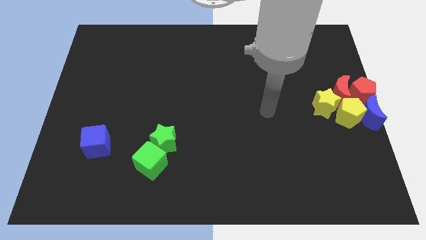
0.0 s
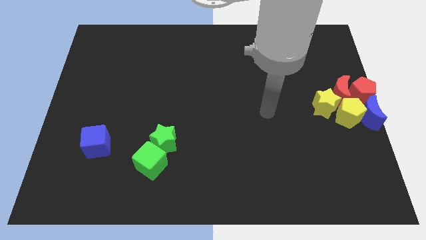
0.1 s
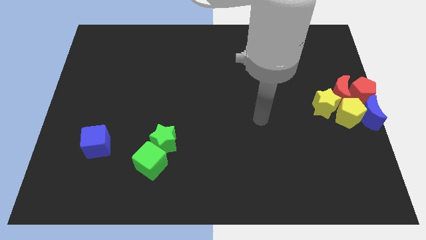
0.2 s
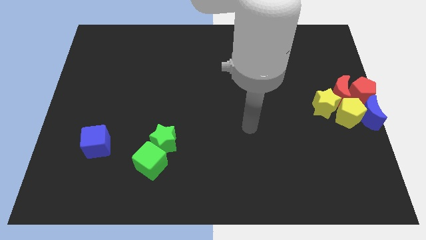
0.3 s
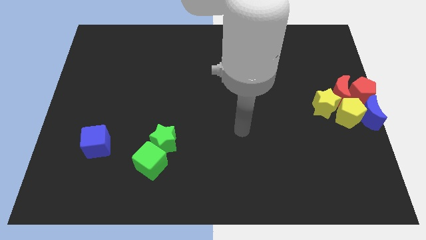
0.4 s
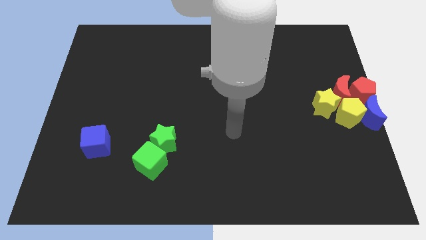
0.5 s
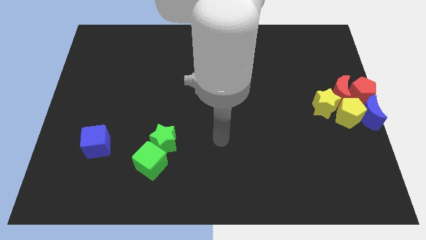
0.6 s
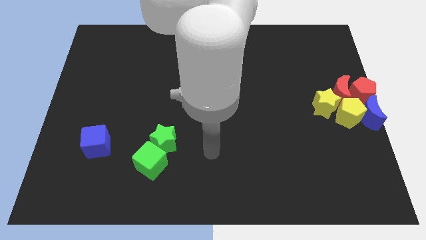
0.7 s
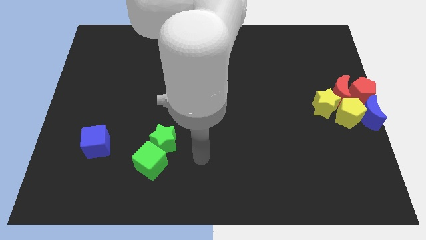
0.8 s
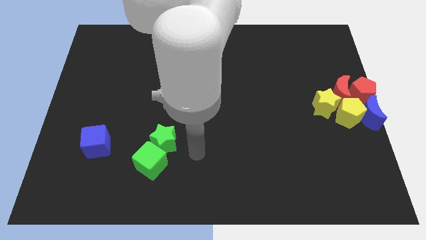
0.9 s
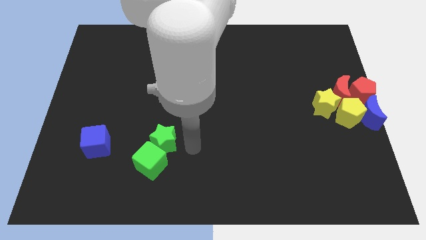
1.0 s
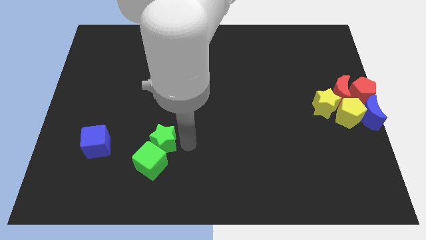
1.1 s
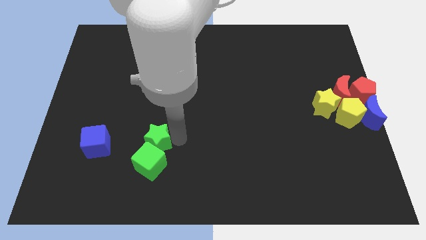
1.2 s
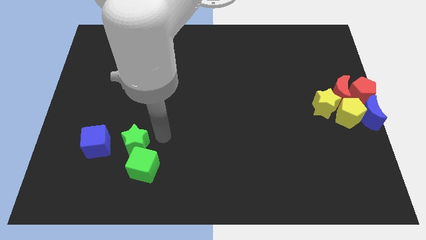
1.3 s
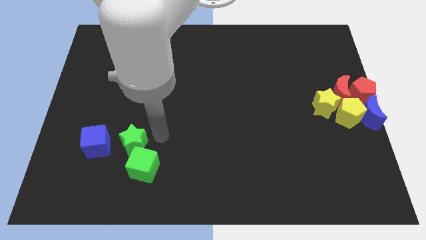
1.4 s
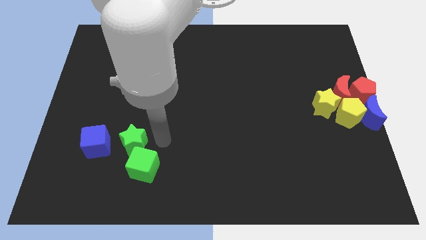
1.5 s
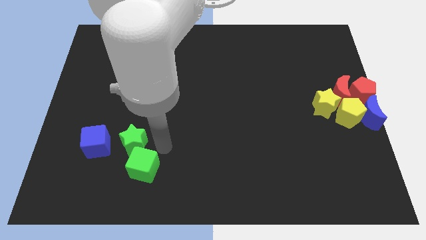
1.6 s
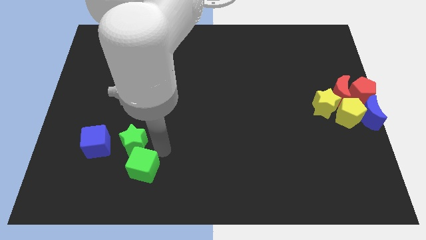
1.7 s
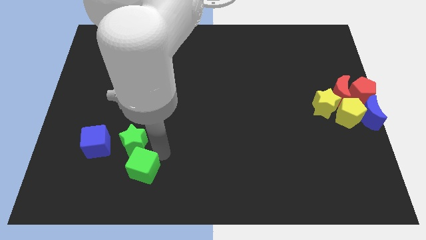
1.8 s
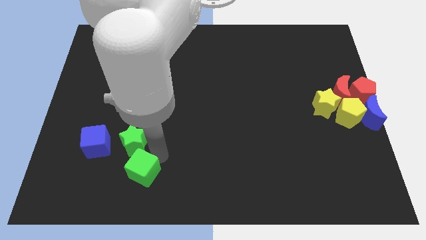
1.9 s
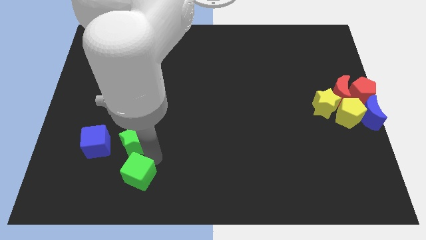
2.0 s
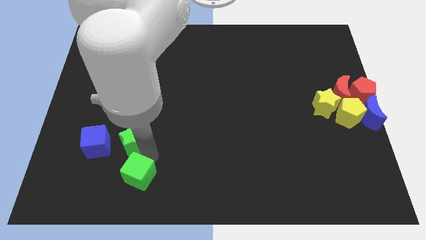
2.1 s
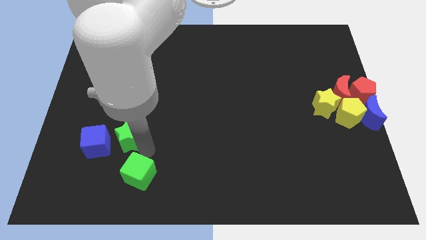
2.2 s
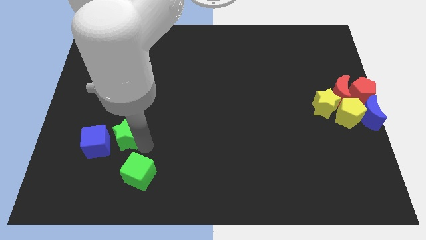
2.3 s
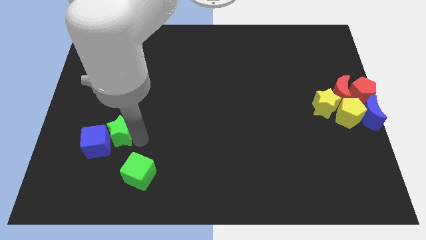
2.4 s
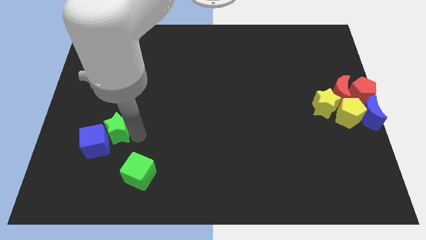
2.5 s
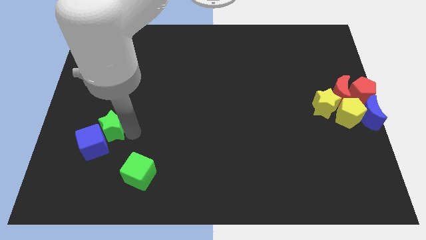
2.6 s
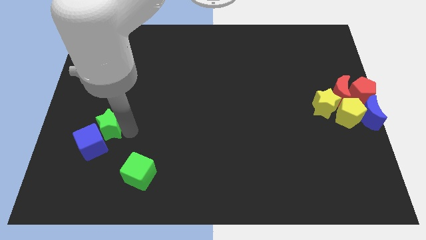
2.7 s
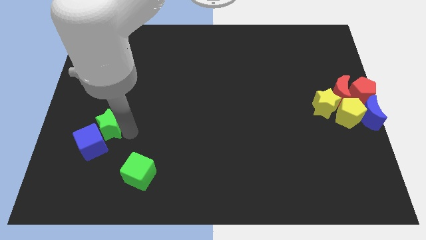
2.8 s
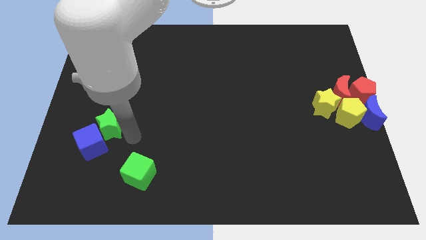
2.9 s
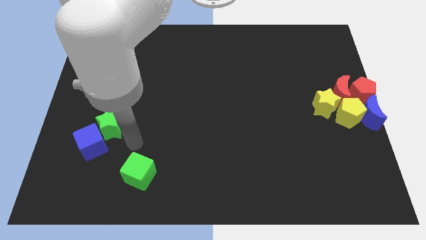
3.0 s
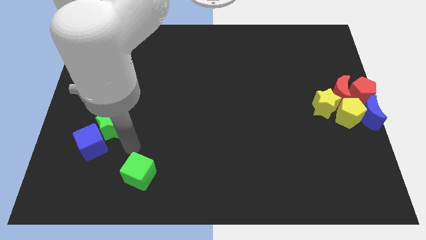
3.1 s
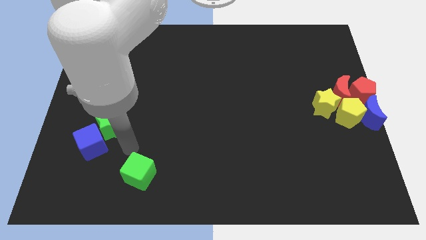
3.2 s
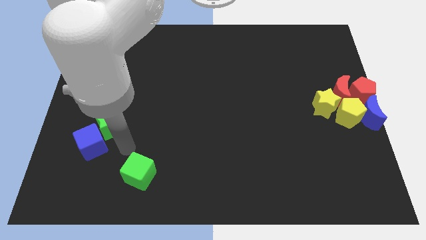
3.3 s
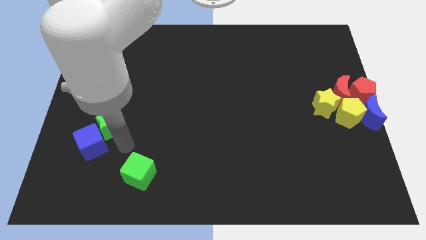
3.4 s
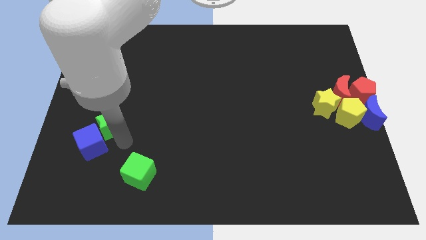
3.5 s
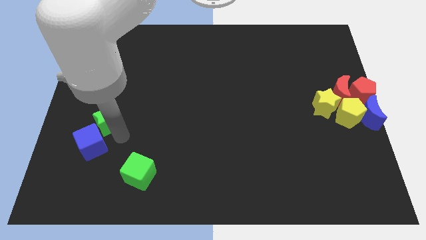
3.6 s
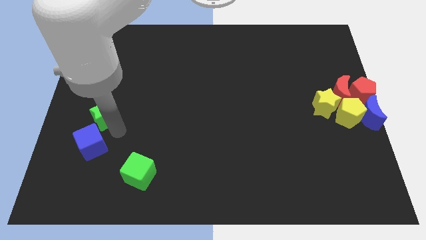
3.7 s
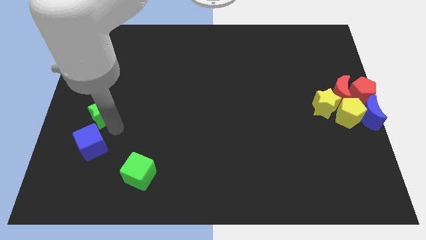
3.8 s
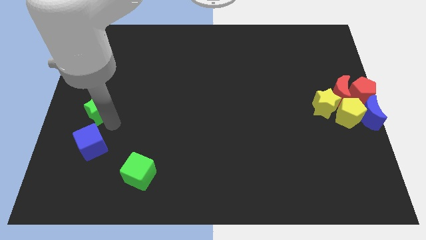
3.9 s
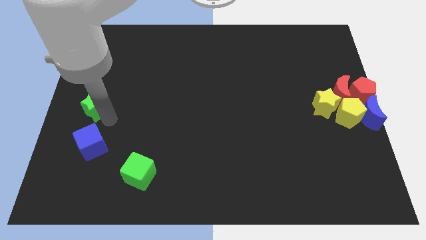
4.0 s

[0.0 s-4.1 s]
move the green star to the top of the blue cube

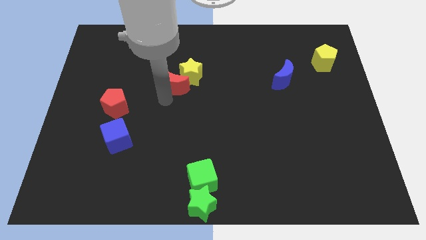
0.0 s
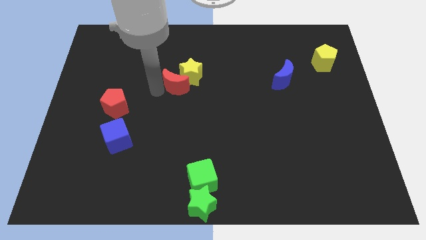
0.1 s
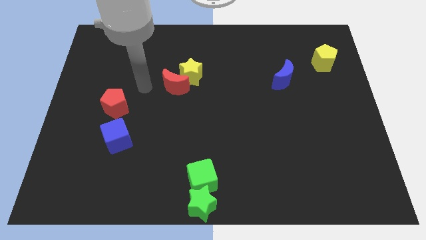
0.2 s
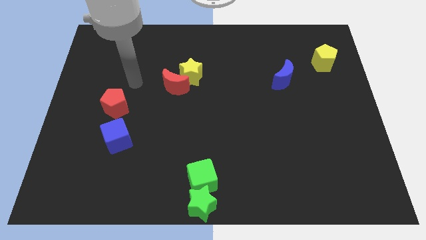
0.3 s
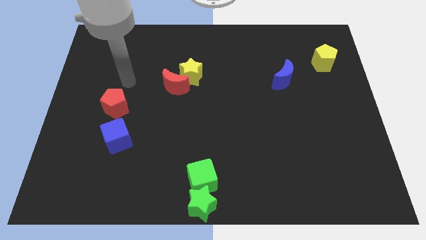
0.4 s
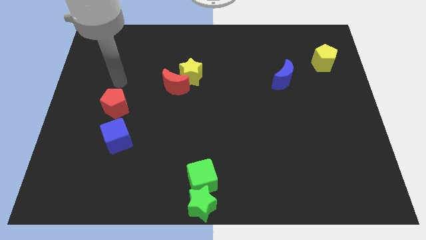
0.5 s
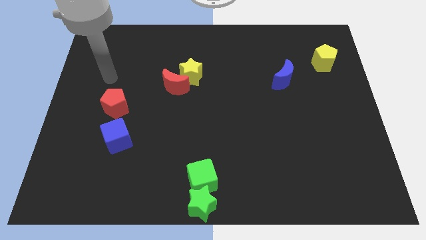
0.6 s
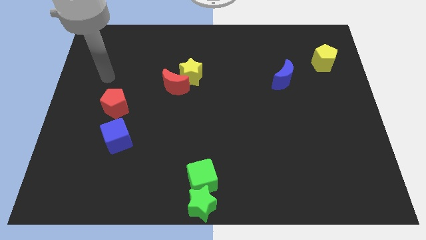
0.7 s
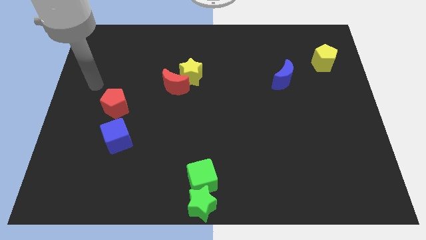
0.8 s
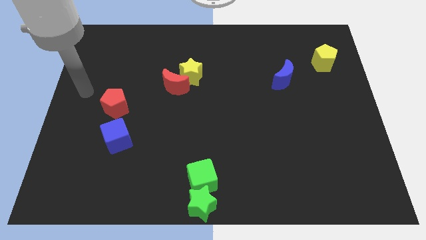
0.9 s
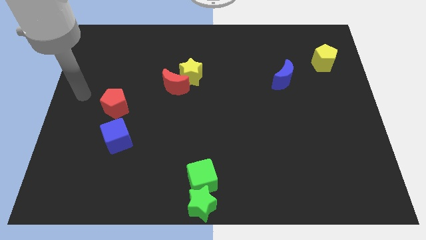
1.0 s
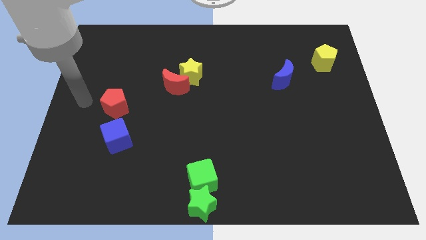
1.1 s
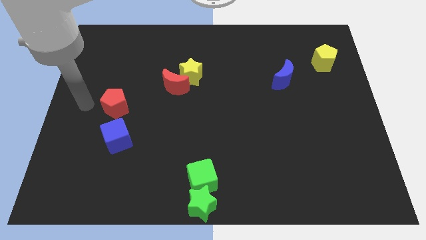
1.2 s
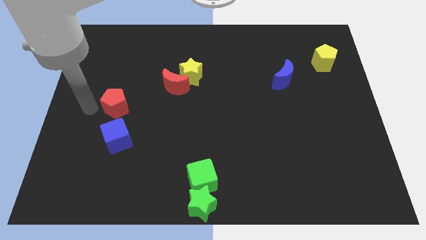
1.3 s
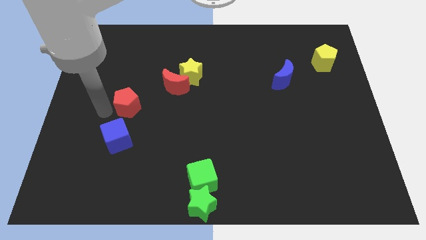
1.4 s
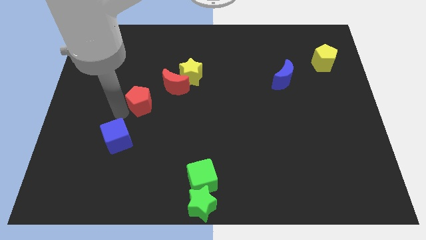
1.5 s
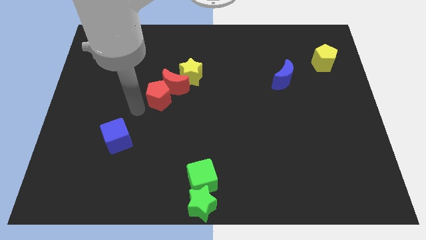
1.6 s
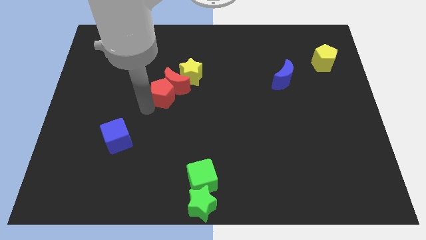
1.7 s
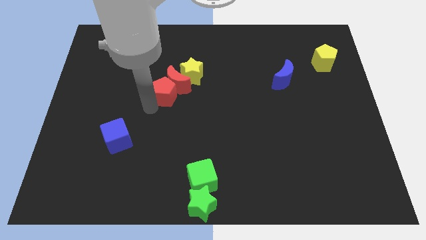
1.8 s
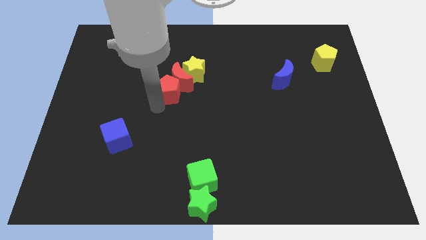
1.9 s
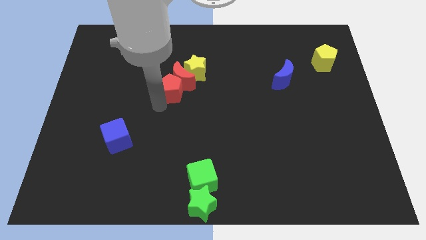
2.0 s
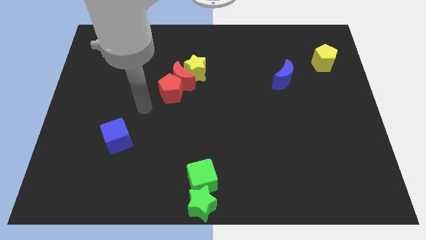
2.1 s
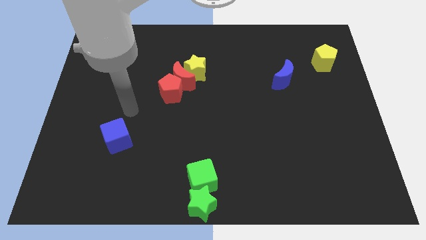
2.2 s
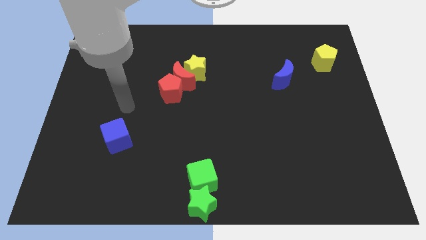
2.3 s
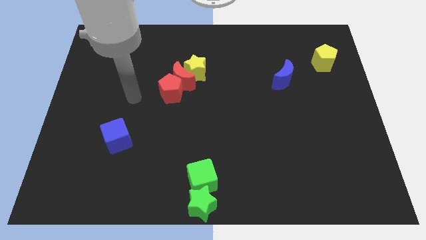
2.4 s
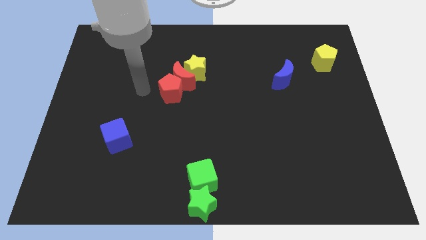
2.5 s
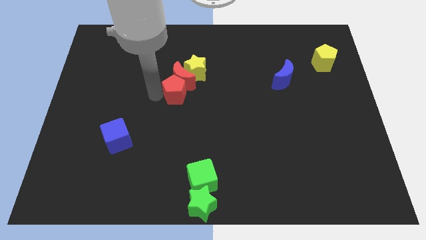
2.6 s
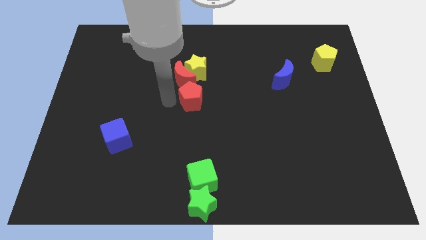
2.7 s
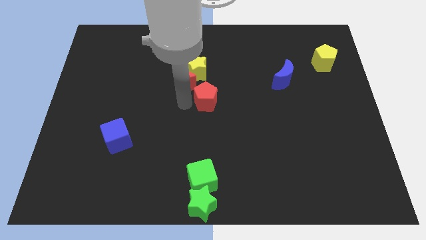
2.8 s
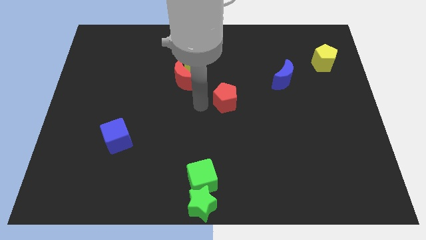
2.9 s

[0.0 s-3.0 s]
place the red pentagon at the center of the board

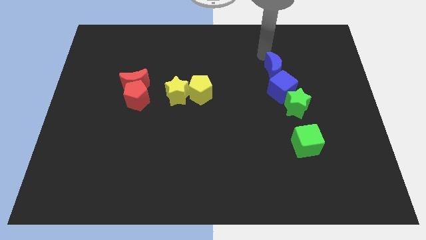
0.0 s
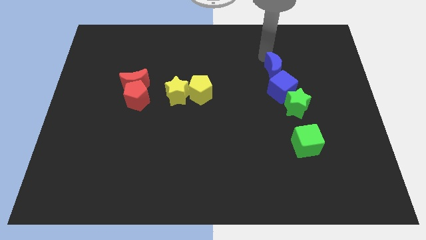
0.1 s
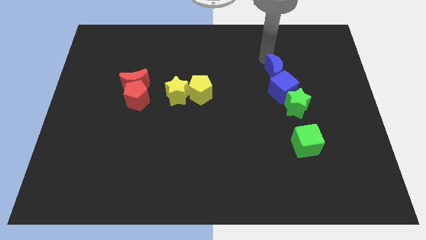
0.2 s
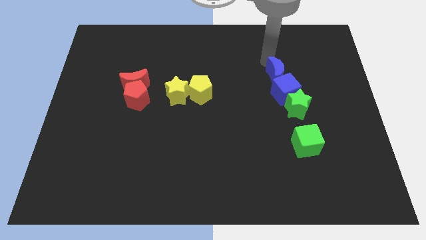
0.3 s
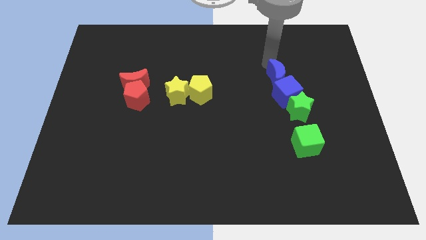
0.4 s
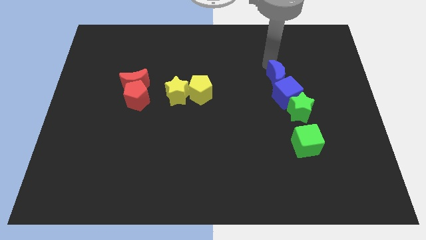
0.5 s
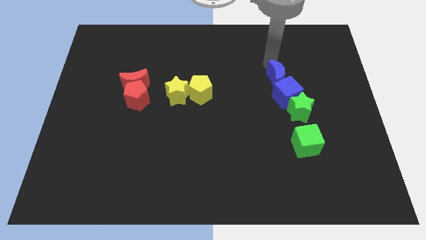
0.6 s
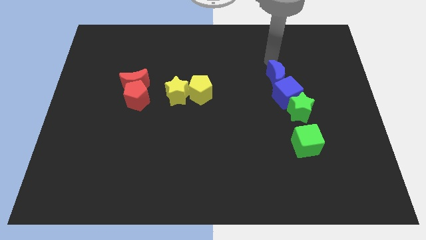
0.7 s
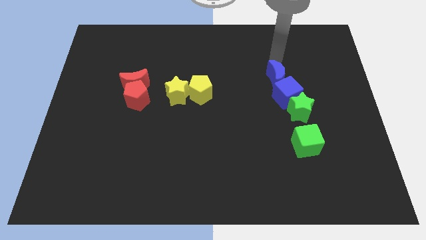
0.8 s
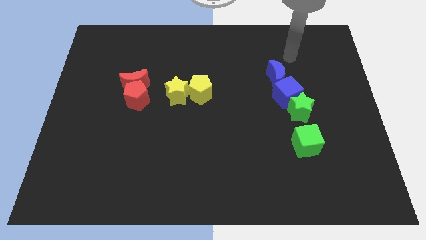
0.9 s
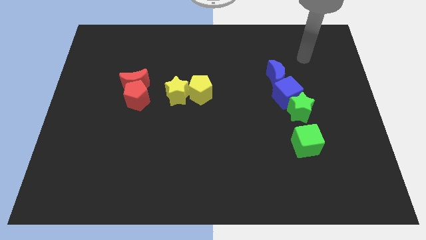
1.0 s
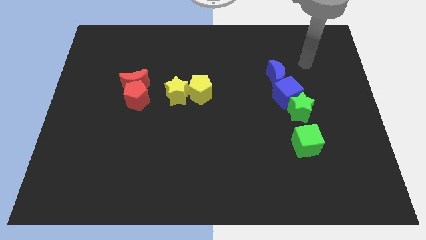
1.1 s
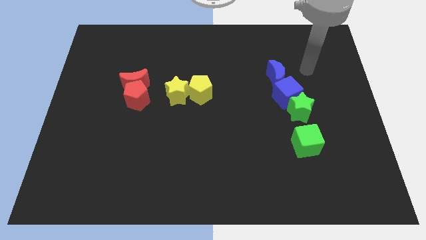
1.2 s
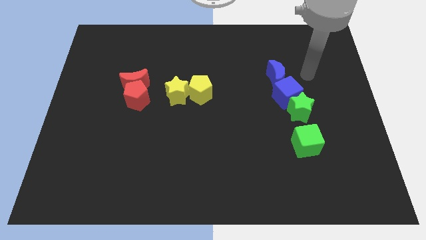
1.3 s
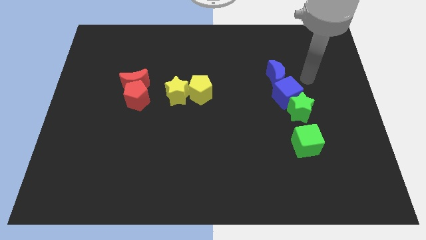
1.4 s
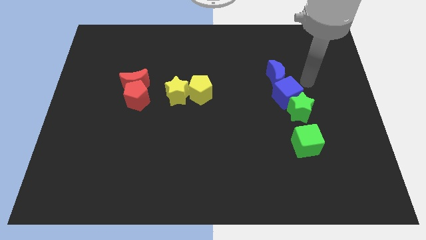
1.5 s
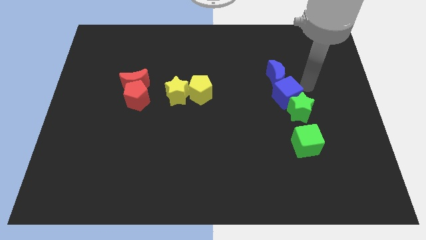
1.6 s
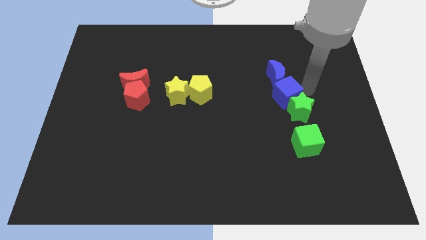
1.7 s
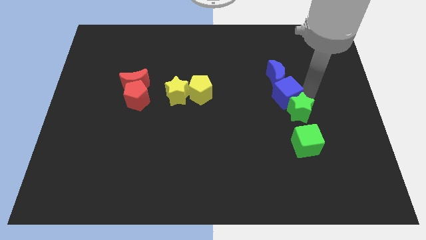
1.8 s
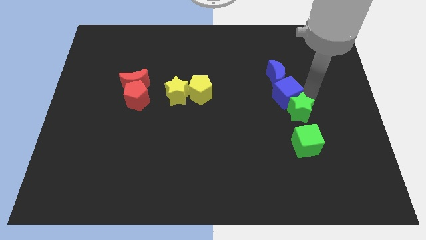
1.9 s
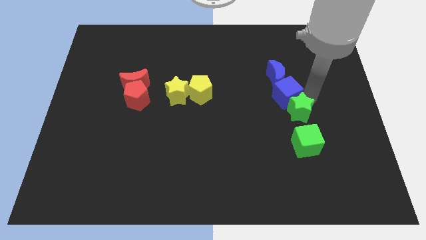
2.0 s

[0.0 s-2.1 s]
slightly push blue moon down
